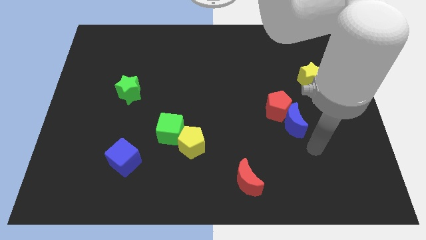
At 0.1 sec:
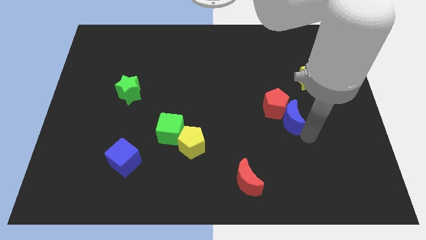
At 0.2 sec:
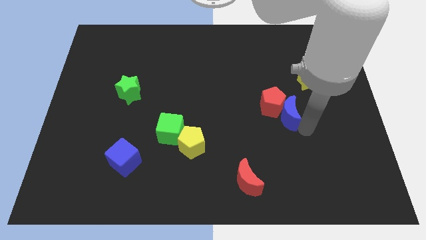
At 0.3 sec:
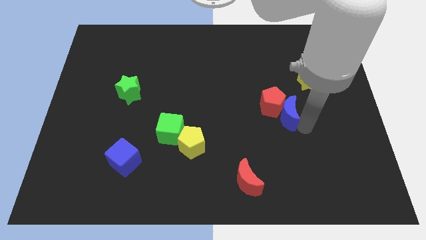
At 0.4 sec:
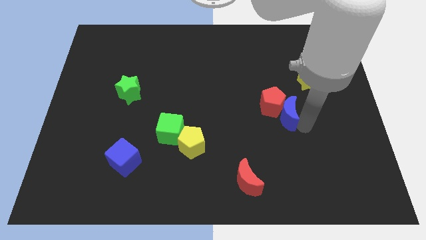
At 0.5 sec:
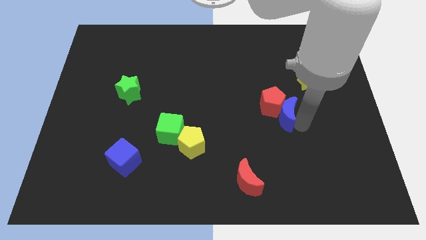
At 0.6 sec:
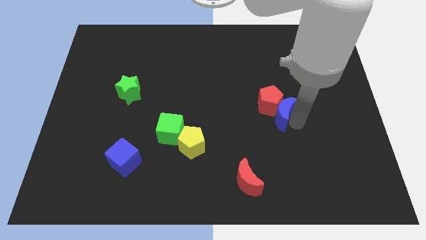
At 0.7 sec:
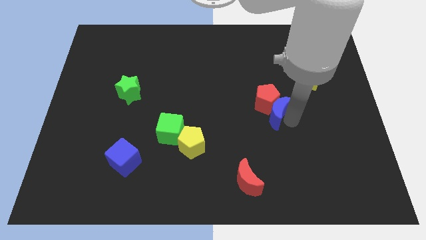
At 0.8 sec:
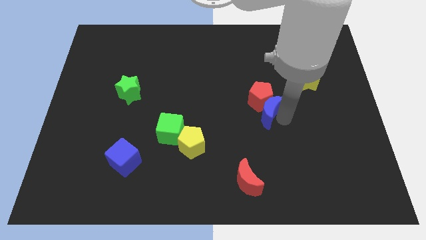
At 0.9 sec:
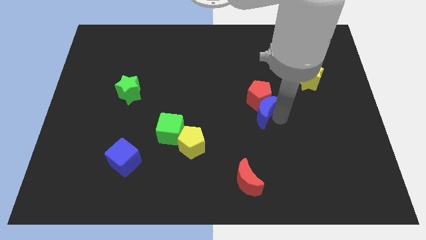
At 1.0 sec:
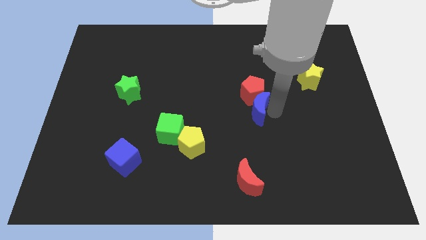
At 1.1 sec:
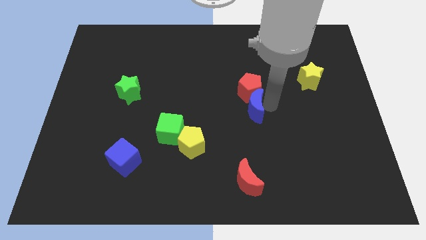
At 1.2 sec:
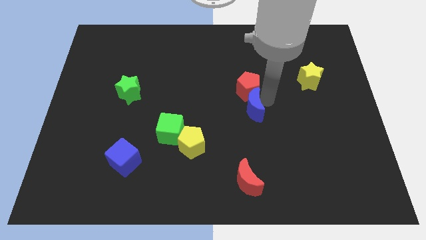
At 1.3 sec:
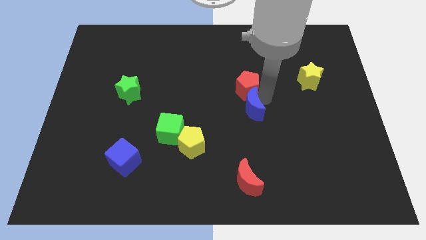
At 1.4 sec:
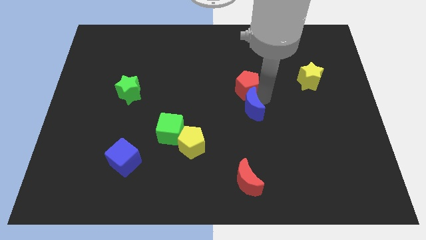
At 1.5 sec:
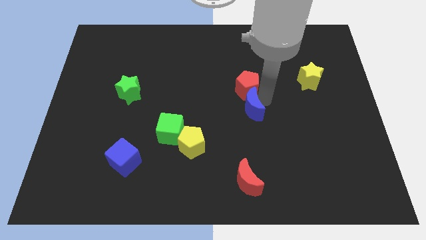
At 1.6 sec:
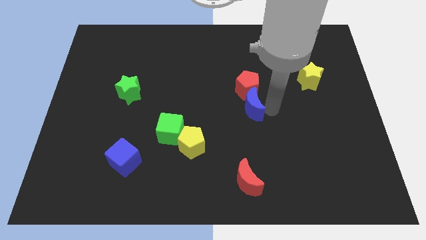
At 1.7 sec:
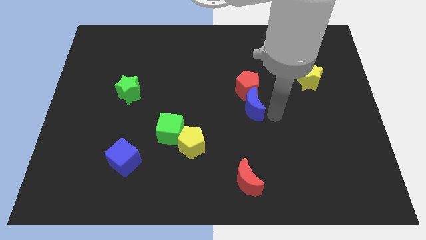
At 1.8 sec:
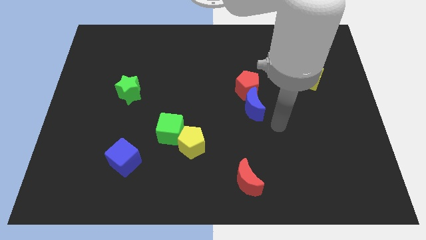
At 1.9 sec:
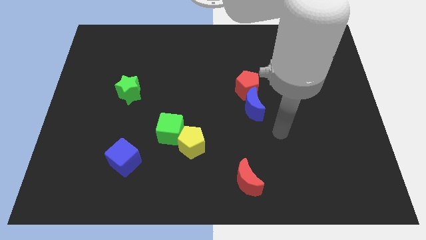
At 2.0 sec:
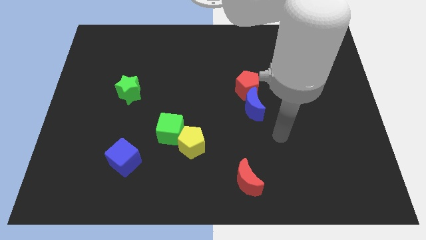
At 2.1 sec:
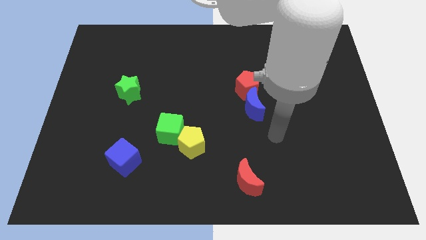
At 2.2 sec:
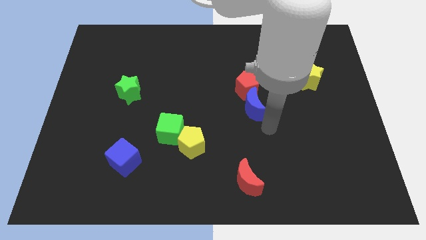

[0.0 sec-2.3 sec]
slide the red pentagon and blue moon diagonally to green cube and yellow pentagon

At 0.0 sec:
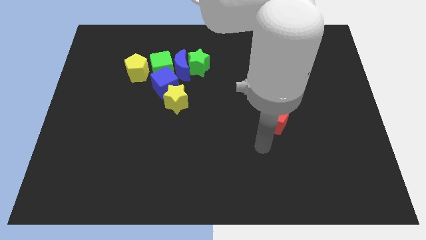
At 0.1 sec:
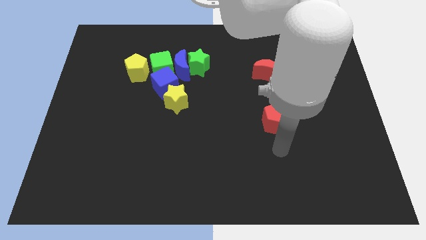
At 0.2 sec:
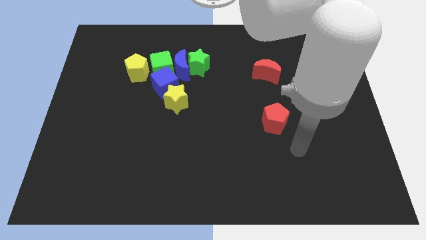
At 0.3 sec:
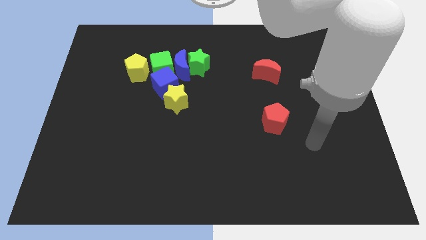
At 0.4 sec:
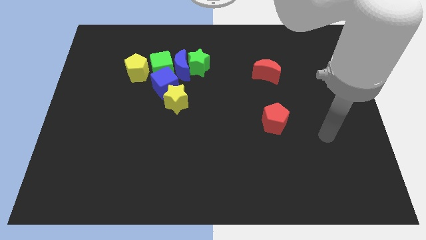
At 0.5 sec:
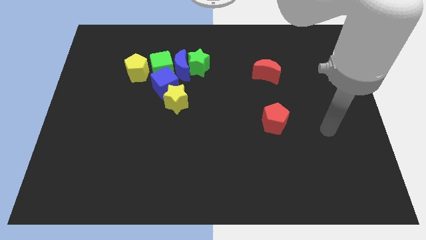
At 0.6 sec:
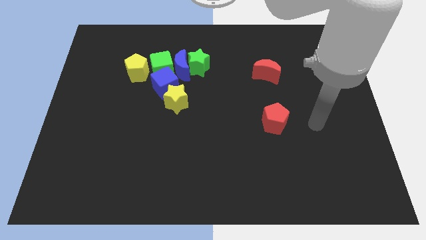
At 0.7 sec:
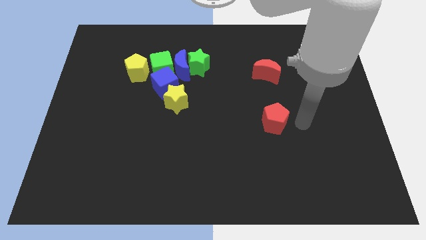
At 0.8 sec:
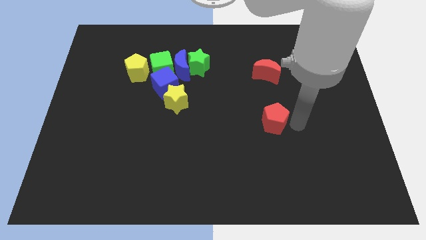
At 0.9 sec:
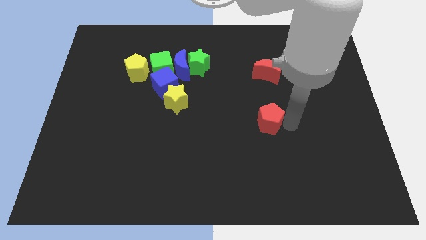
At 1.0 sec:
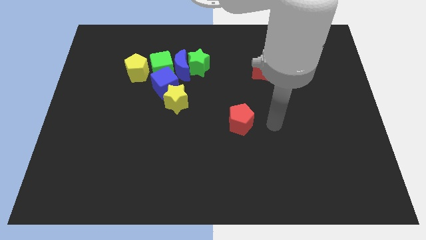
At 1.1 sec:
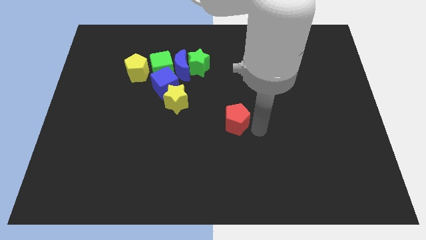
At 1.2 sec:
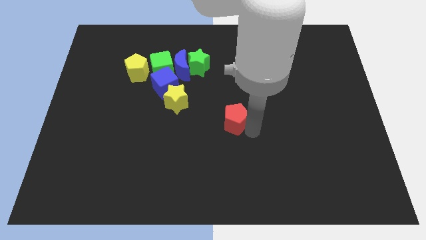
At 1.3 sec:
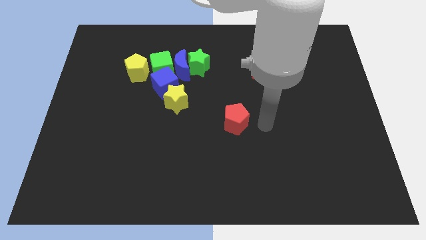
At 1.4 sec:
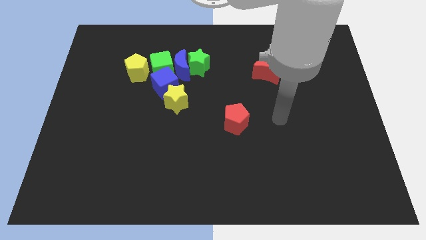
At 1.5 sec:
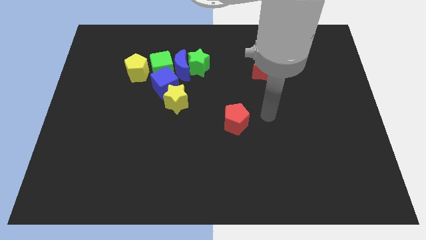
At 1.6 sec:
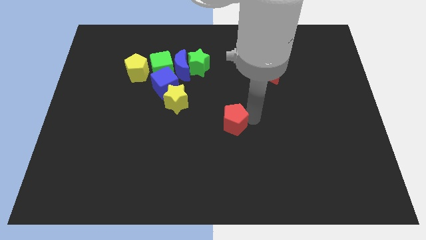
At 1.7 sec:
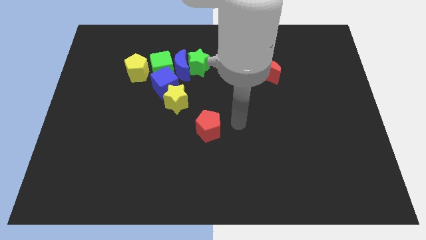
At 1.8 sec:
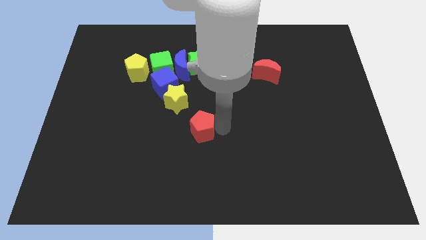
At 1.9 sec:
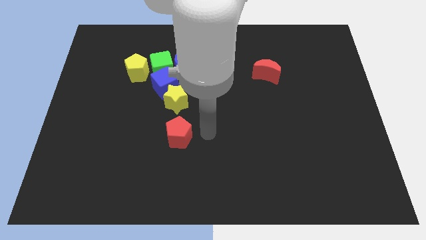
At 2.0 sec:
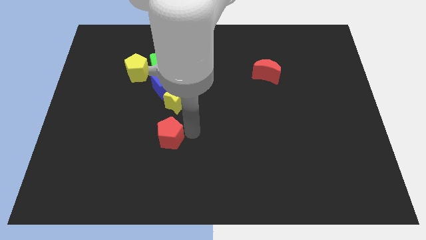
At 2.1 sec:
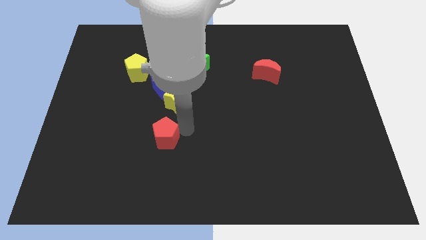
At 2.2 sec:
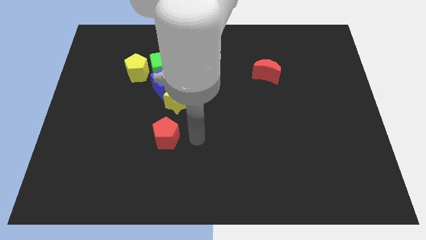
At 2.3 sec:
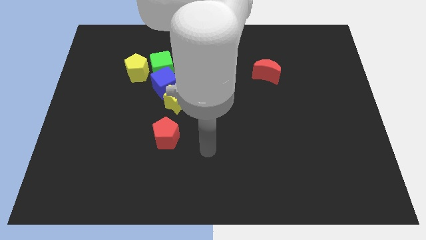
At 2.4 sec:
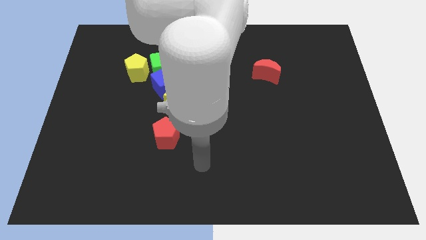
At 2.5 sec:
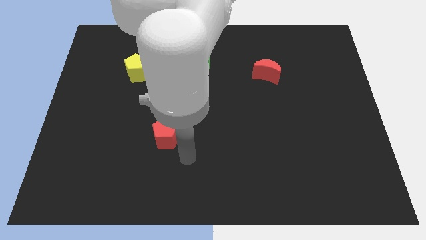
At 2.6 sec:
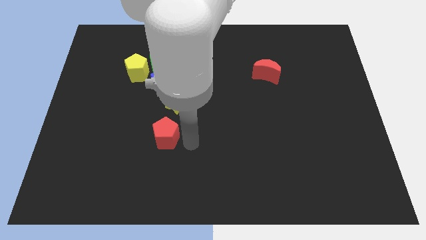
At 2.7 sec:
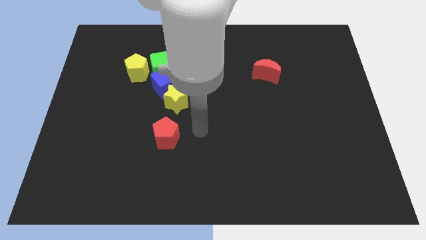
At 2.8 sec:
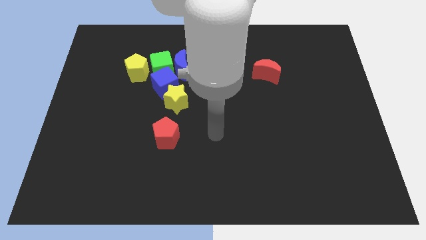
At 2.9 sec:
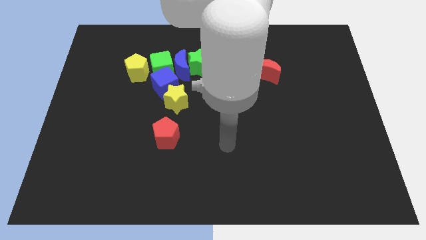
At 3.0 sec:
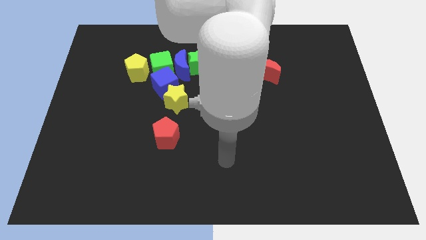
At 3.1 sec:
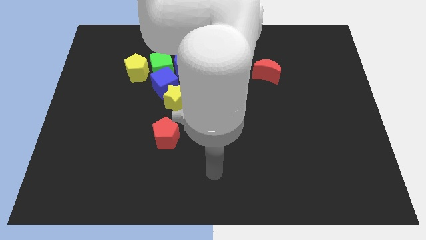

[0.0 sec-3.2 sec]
push the red pentagon to the bottom of yellow star

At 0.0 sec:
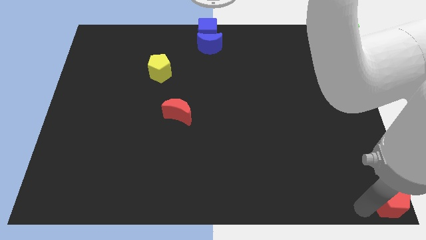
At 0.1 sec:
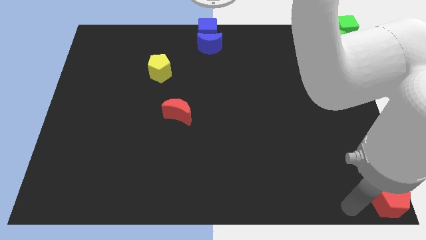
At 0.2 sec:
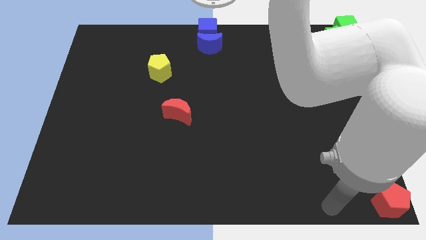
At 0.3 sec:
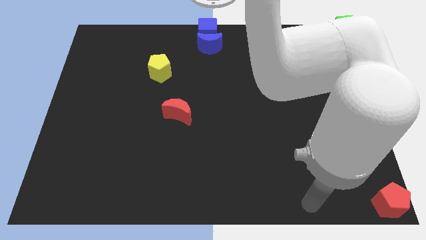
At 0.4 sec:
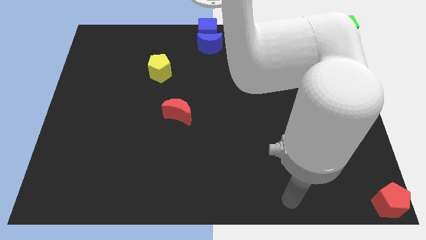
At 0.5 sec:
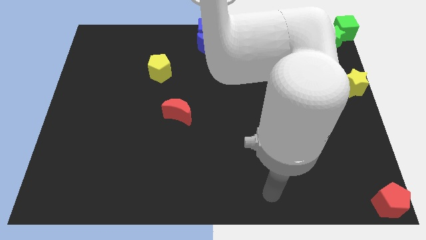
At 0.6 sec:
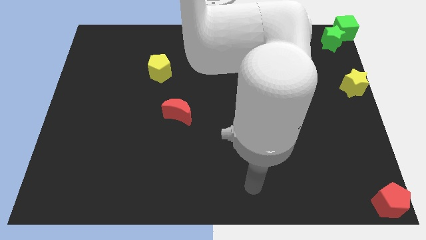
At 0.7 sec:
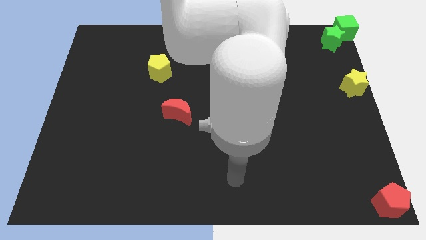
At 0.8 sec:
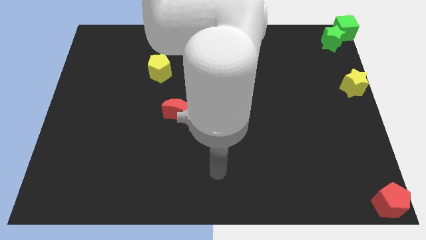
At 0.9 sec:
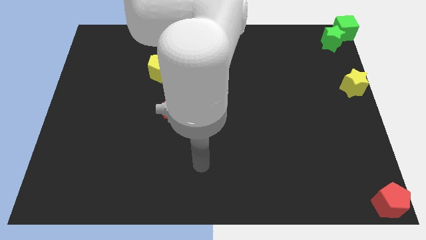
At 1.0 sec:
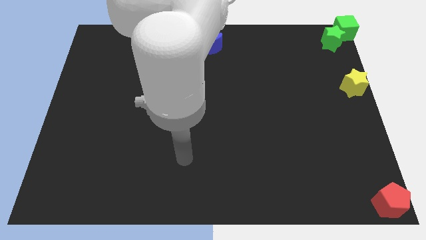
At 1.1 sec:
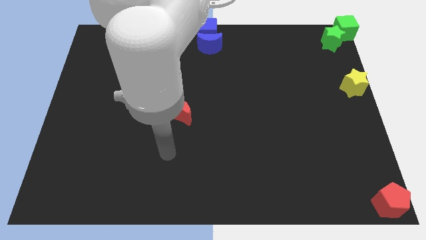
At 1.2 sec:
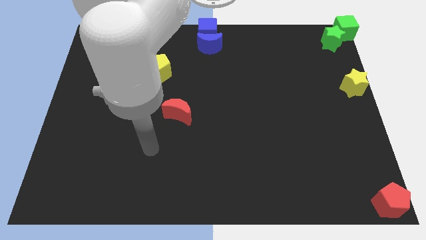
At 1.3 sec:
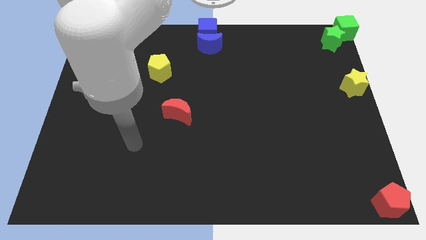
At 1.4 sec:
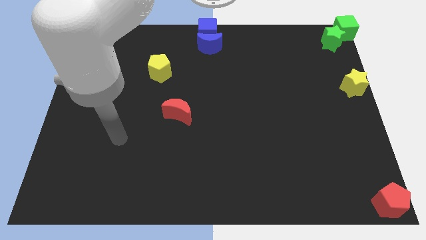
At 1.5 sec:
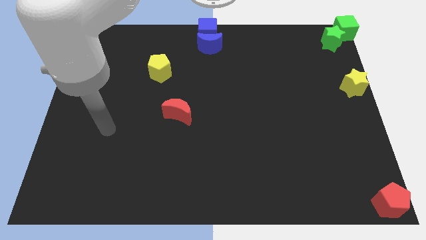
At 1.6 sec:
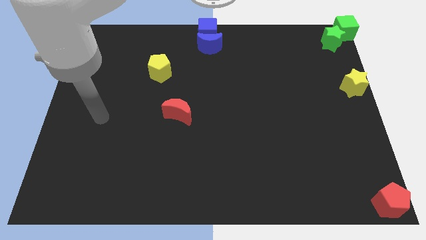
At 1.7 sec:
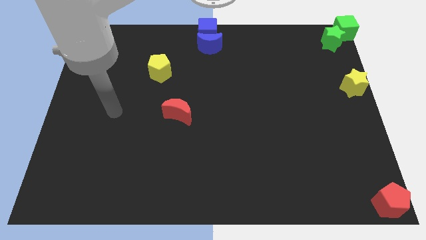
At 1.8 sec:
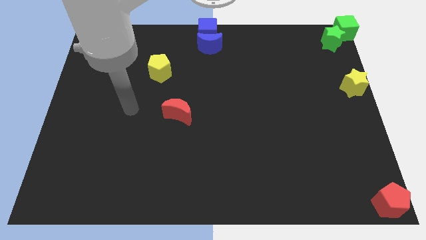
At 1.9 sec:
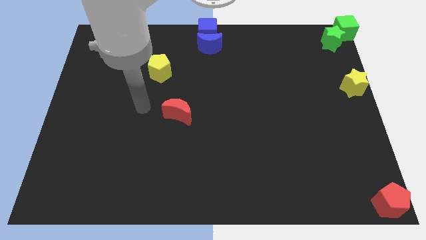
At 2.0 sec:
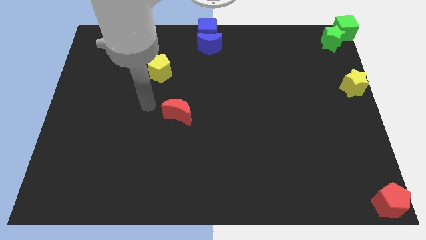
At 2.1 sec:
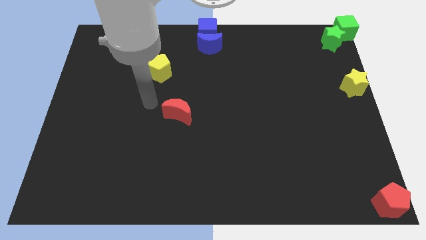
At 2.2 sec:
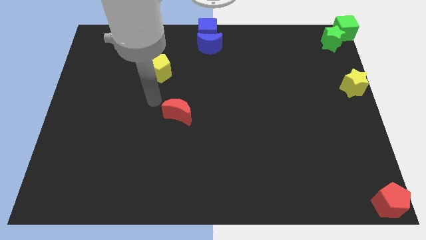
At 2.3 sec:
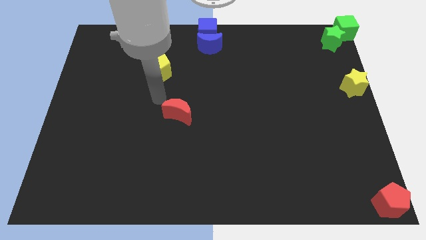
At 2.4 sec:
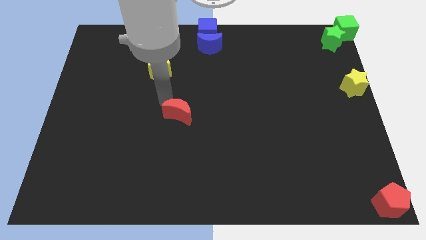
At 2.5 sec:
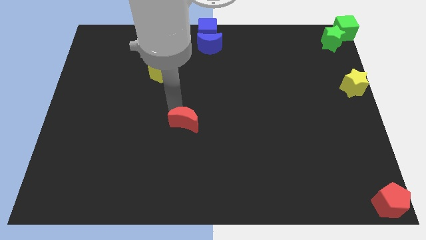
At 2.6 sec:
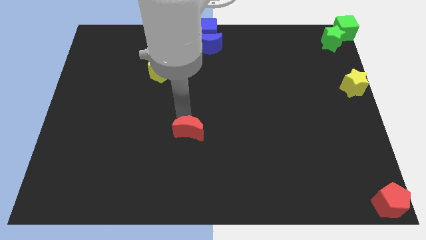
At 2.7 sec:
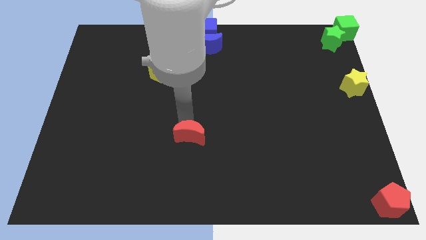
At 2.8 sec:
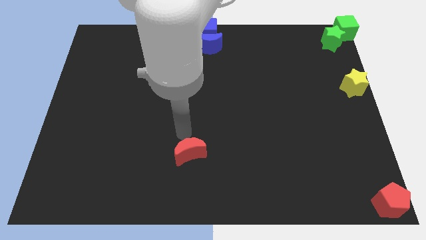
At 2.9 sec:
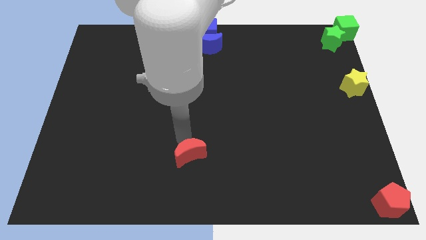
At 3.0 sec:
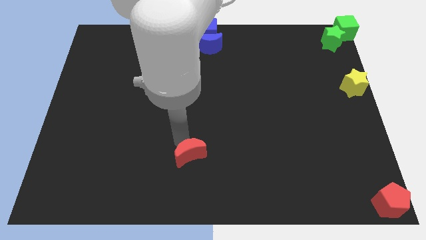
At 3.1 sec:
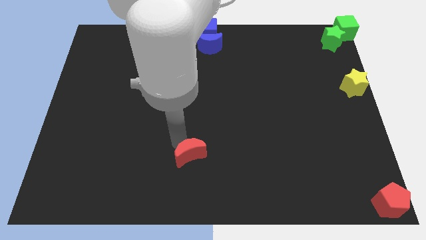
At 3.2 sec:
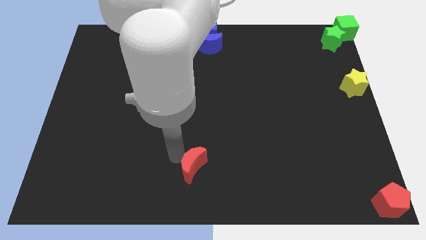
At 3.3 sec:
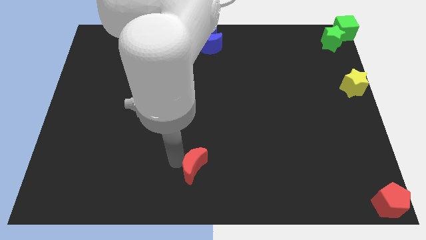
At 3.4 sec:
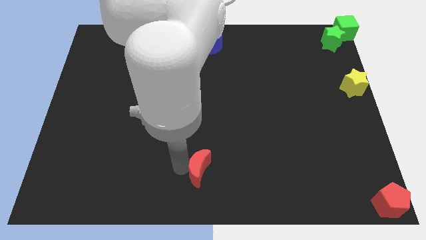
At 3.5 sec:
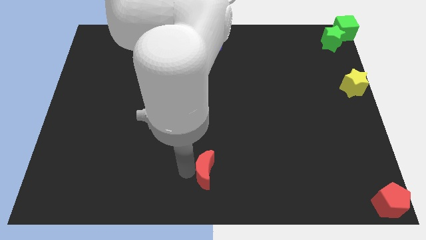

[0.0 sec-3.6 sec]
push the red crescent to the bottom center to the board
